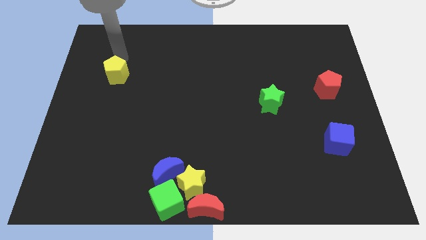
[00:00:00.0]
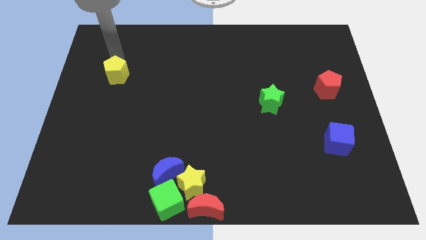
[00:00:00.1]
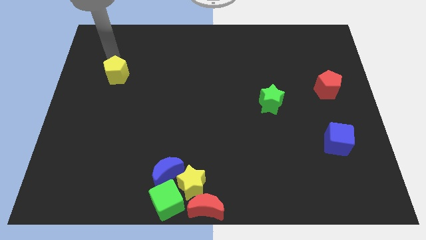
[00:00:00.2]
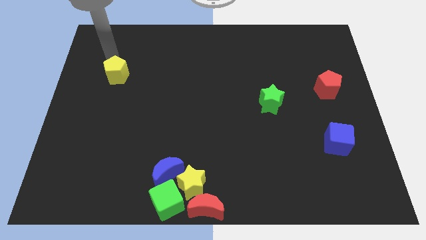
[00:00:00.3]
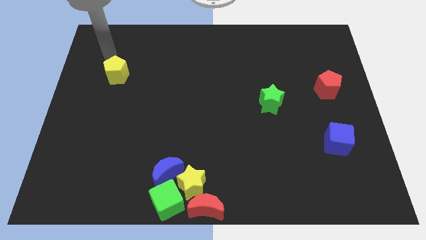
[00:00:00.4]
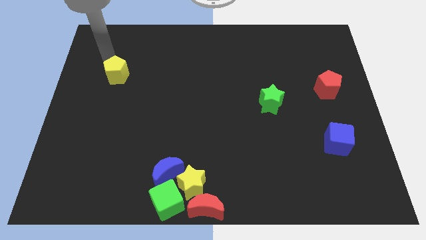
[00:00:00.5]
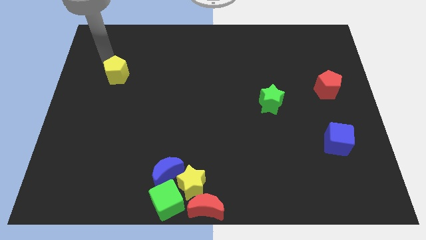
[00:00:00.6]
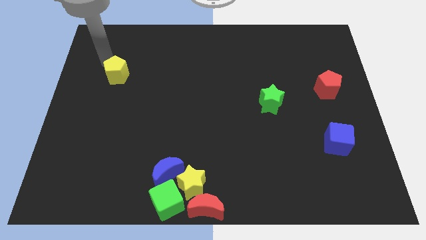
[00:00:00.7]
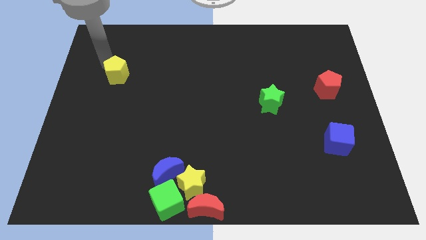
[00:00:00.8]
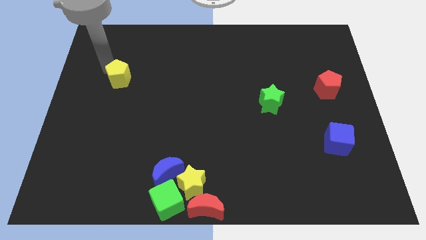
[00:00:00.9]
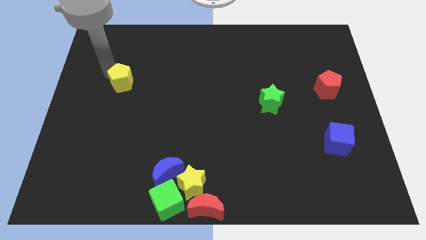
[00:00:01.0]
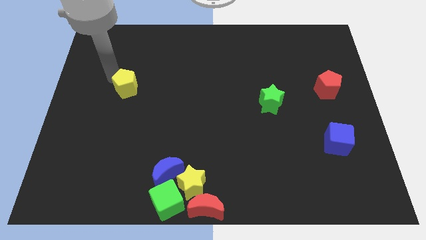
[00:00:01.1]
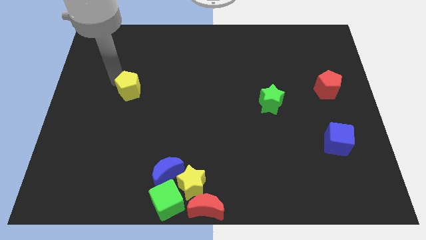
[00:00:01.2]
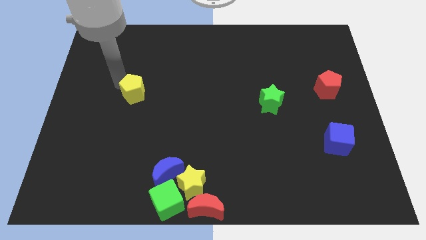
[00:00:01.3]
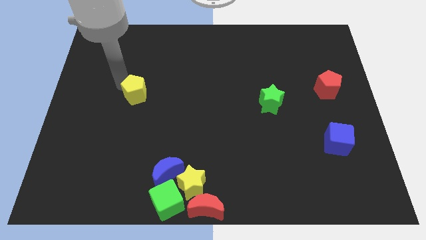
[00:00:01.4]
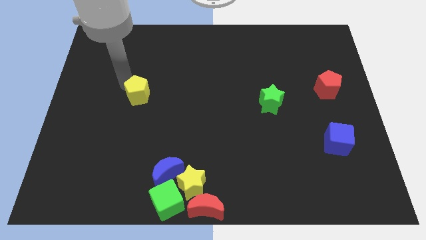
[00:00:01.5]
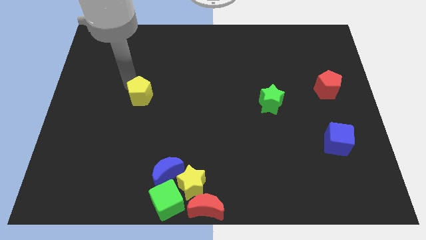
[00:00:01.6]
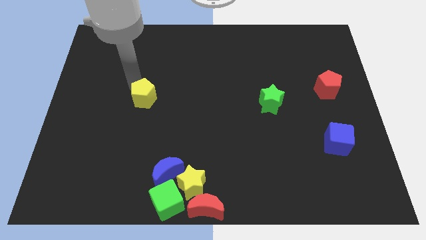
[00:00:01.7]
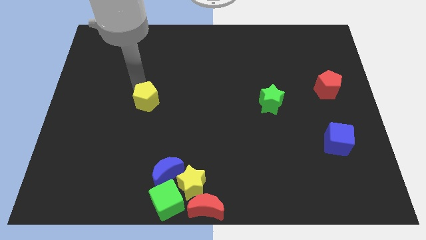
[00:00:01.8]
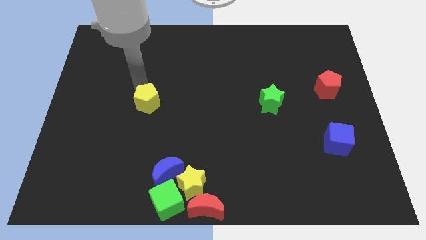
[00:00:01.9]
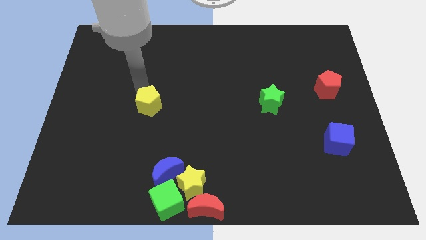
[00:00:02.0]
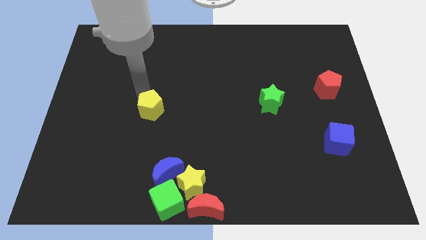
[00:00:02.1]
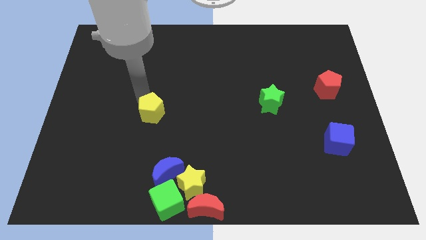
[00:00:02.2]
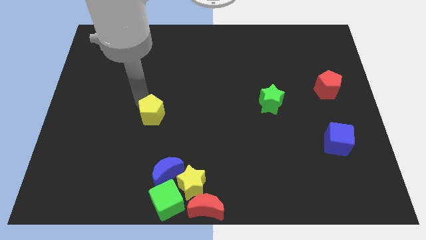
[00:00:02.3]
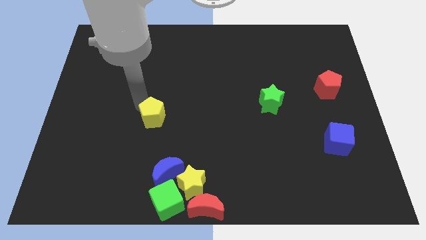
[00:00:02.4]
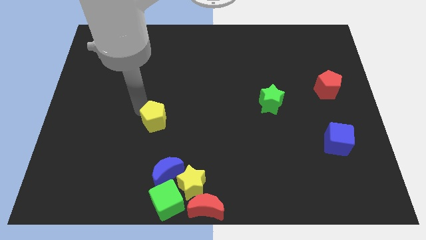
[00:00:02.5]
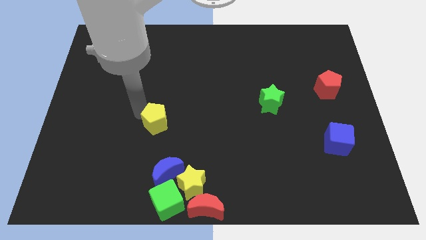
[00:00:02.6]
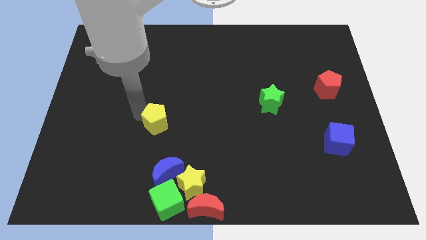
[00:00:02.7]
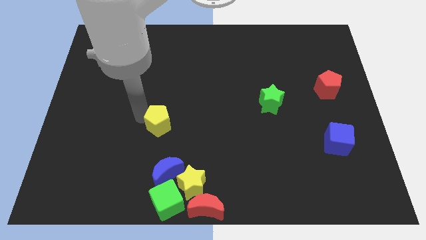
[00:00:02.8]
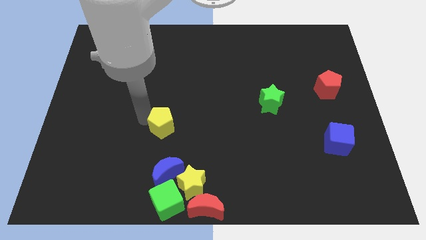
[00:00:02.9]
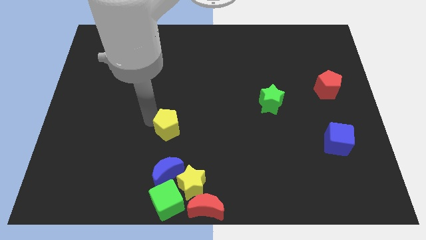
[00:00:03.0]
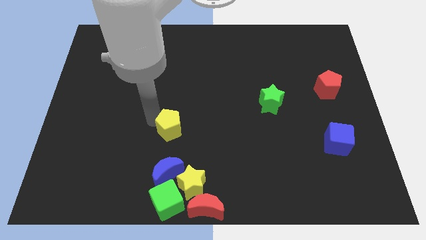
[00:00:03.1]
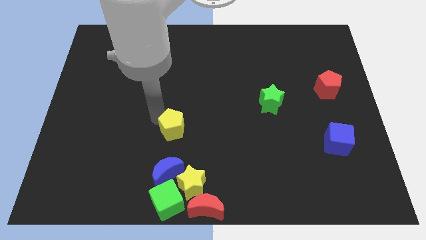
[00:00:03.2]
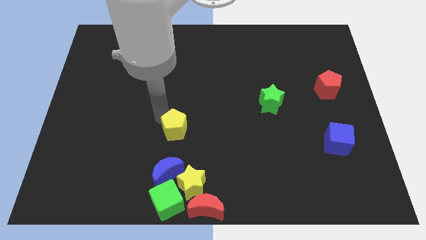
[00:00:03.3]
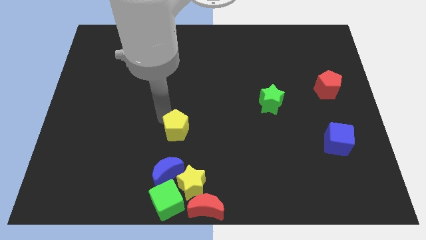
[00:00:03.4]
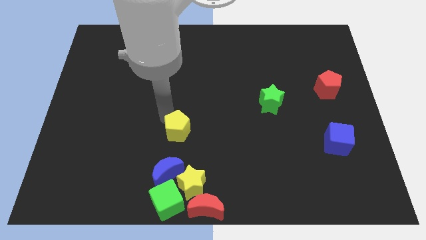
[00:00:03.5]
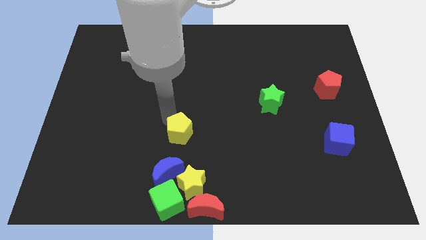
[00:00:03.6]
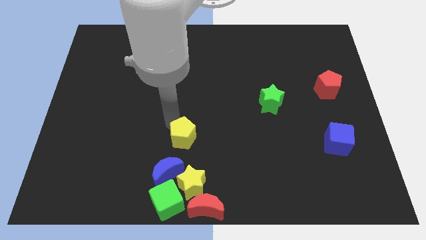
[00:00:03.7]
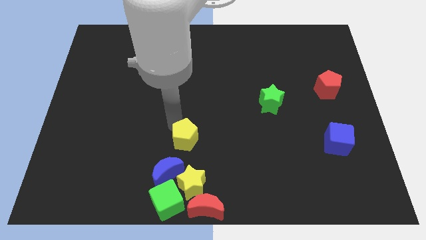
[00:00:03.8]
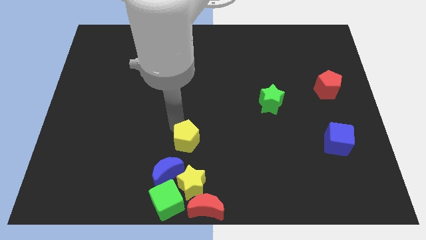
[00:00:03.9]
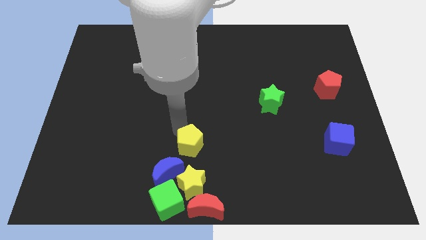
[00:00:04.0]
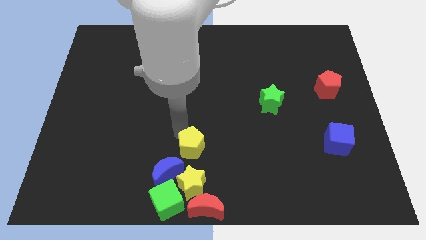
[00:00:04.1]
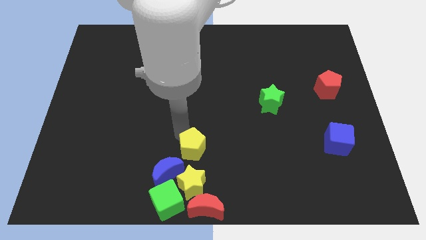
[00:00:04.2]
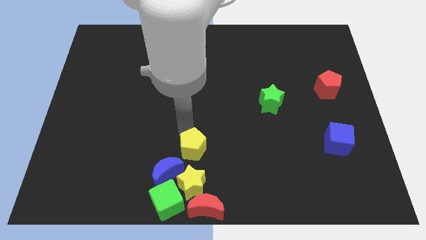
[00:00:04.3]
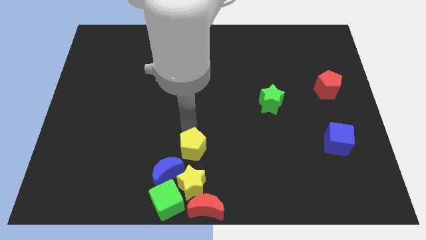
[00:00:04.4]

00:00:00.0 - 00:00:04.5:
move the yellow pentagon towards the right side of yellow star

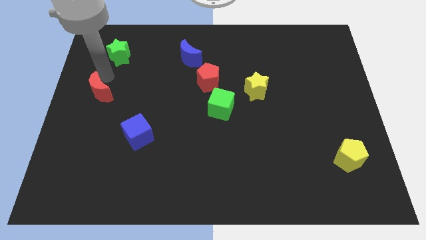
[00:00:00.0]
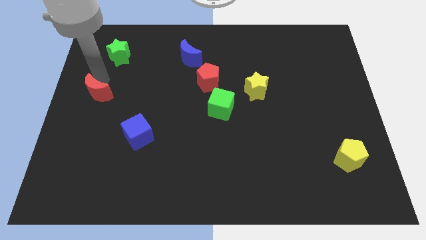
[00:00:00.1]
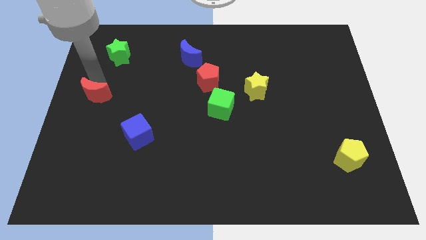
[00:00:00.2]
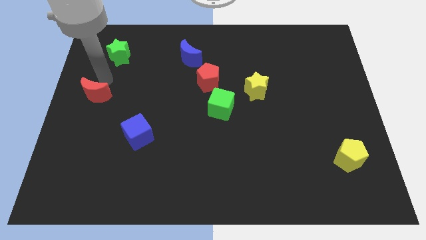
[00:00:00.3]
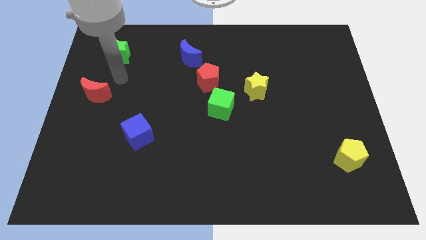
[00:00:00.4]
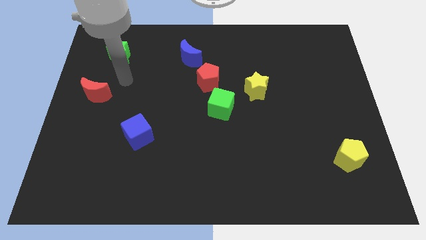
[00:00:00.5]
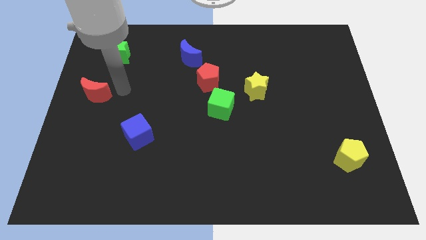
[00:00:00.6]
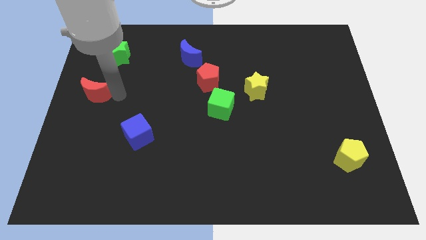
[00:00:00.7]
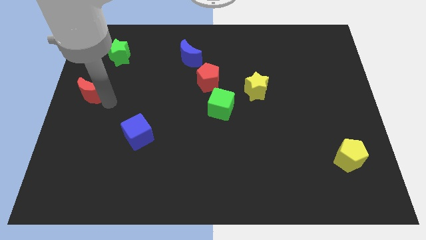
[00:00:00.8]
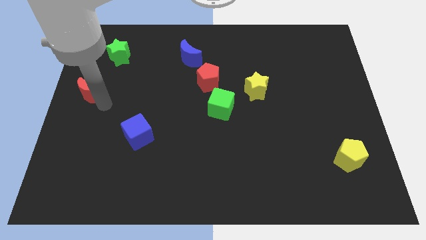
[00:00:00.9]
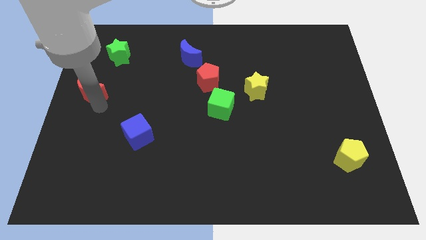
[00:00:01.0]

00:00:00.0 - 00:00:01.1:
place the arm below to the red moon

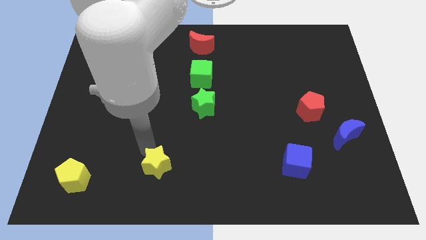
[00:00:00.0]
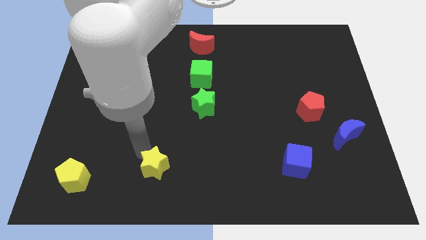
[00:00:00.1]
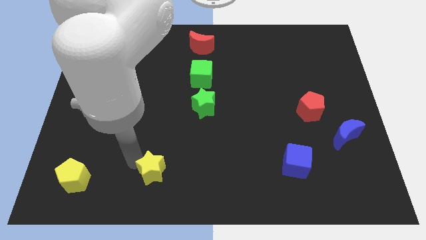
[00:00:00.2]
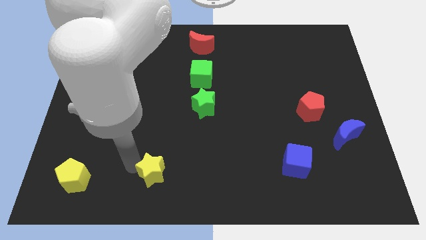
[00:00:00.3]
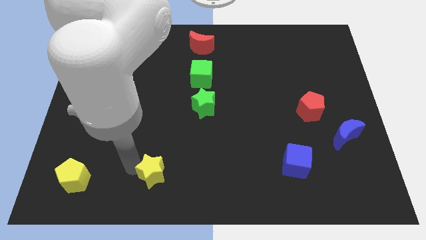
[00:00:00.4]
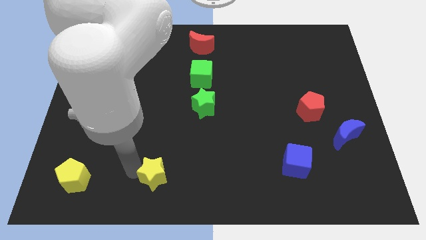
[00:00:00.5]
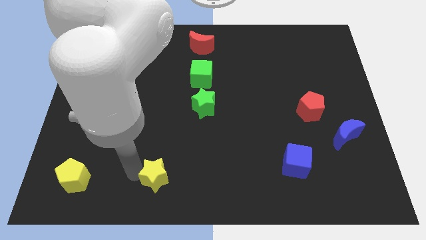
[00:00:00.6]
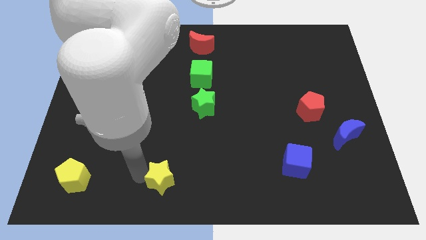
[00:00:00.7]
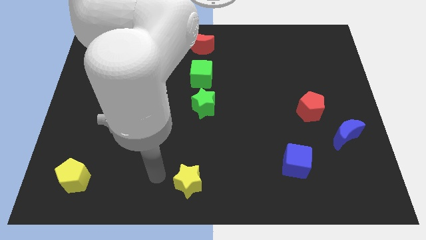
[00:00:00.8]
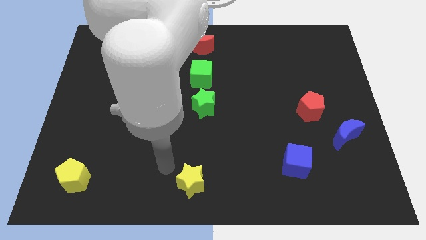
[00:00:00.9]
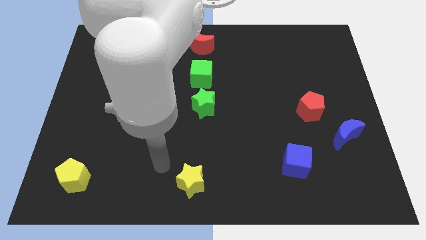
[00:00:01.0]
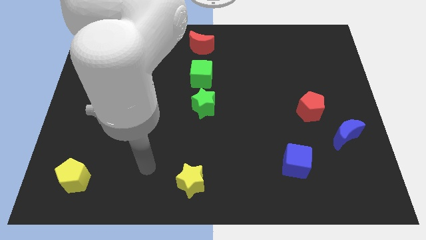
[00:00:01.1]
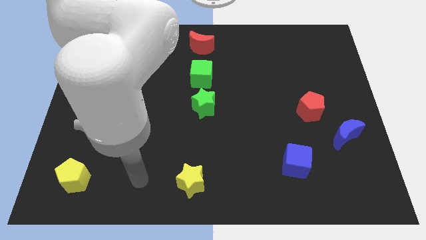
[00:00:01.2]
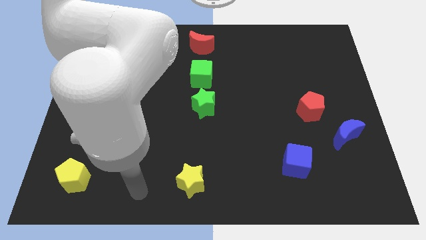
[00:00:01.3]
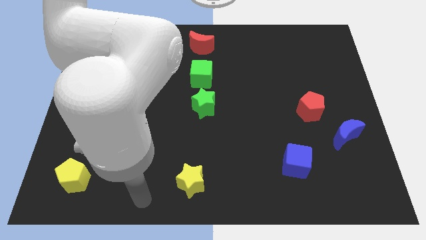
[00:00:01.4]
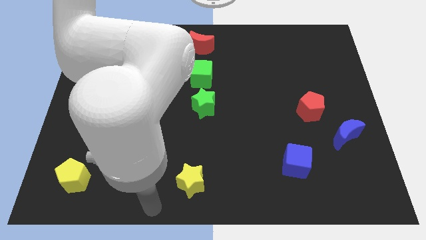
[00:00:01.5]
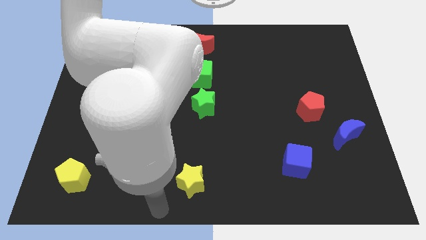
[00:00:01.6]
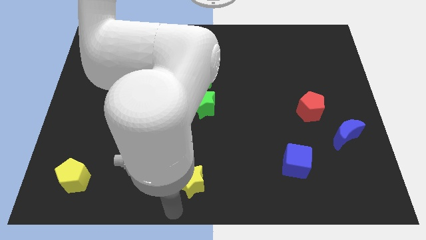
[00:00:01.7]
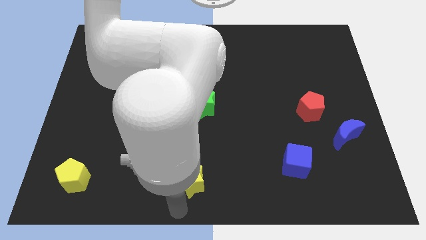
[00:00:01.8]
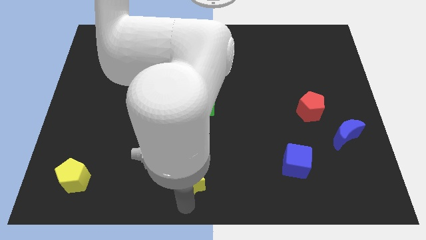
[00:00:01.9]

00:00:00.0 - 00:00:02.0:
place the yellow star vertically below the green star

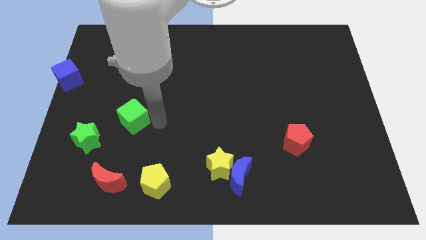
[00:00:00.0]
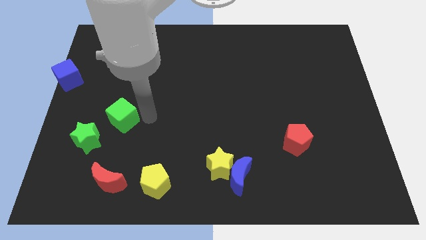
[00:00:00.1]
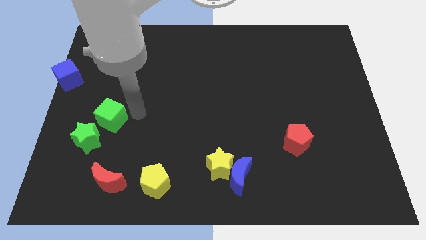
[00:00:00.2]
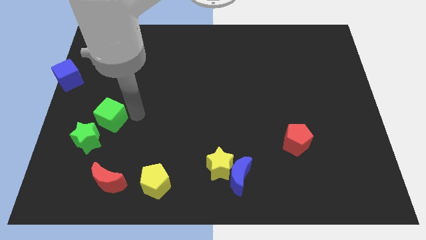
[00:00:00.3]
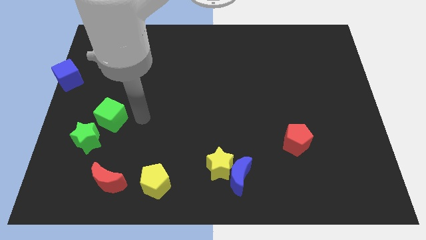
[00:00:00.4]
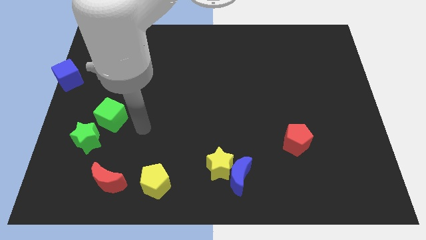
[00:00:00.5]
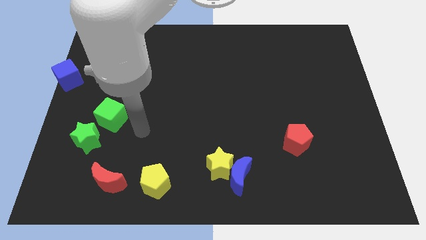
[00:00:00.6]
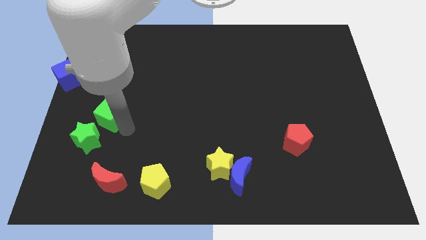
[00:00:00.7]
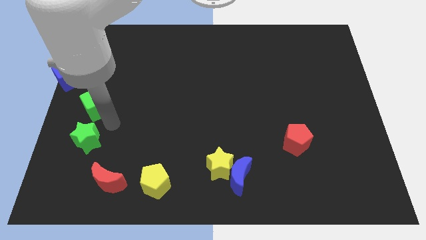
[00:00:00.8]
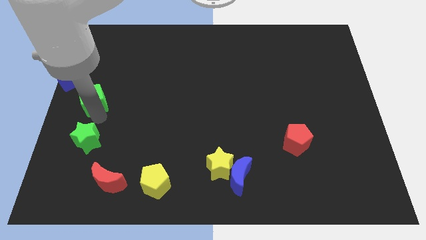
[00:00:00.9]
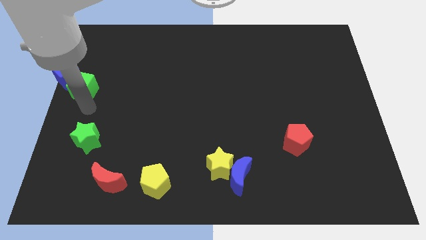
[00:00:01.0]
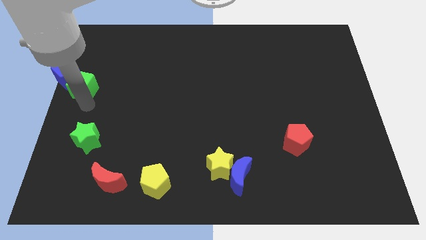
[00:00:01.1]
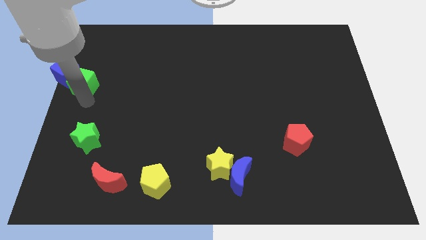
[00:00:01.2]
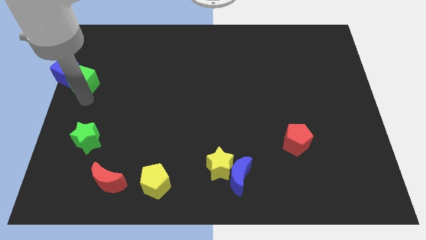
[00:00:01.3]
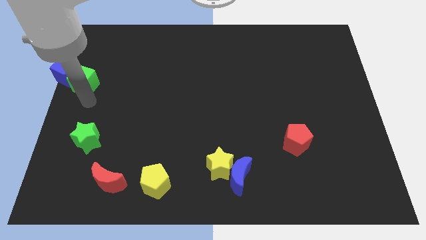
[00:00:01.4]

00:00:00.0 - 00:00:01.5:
push the green cube into the blue cube
